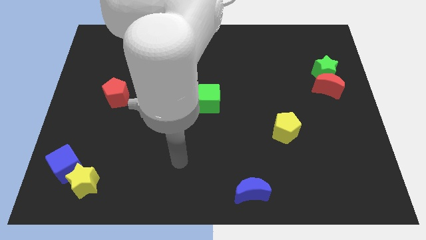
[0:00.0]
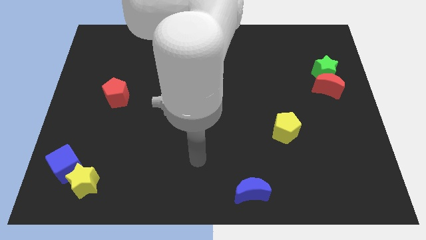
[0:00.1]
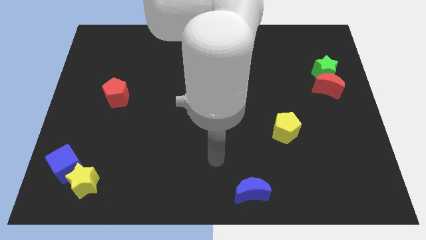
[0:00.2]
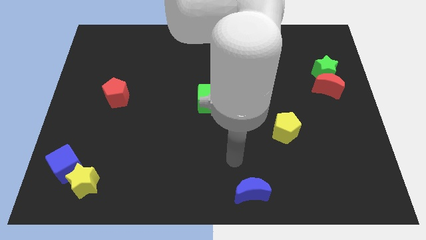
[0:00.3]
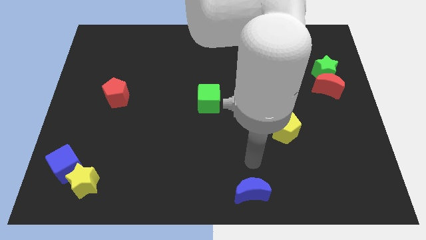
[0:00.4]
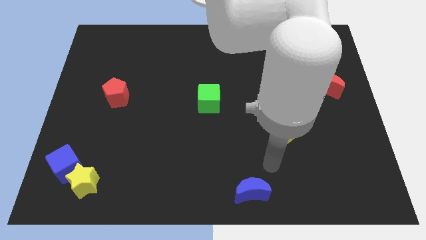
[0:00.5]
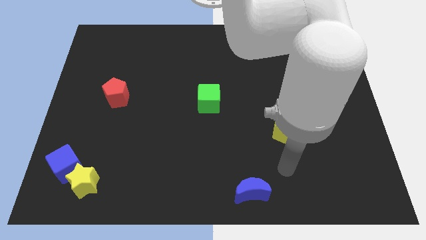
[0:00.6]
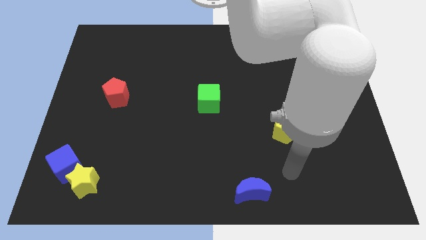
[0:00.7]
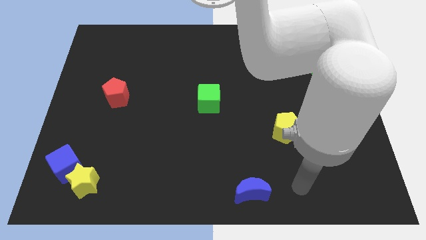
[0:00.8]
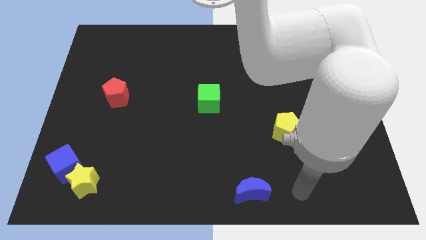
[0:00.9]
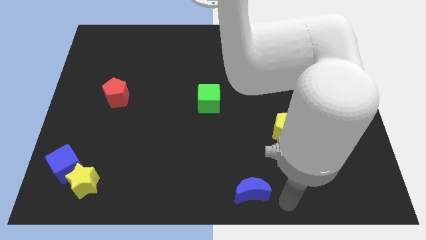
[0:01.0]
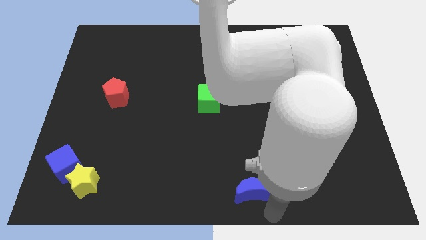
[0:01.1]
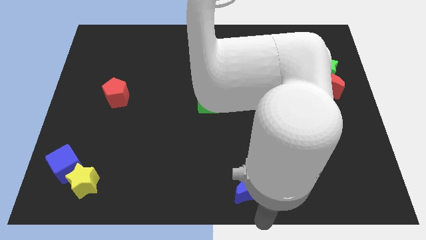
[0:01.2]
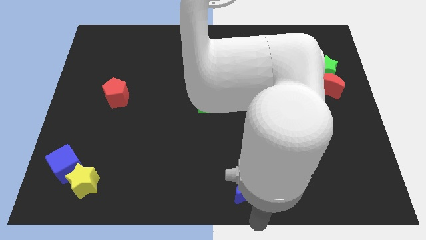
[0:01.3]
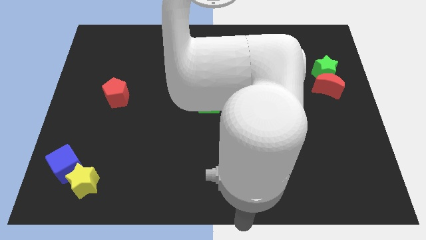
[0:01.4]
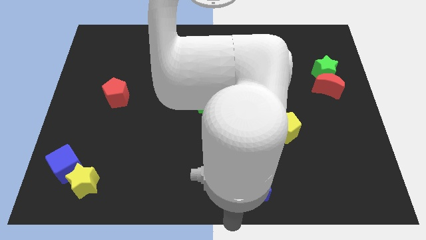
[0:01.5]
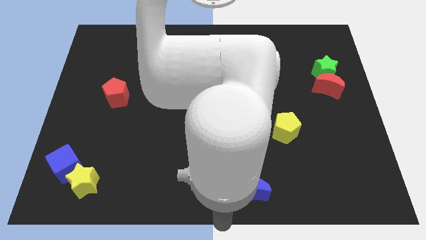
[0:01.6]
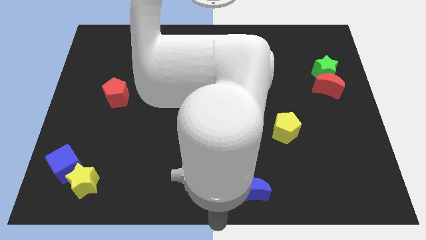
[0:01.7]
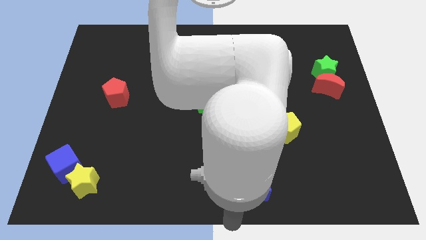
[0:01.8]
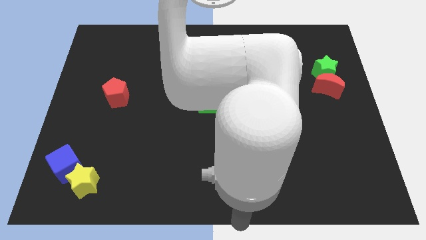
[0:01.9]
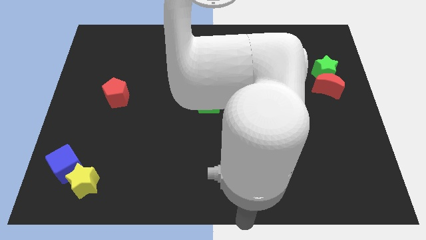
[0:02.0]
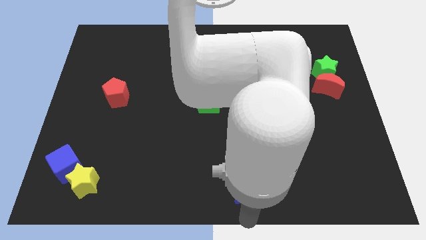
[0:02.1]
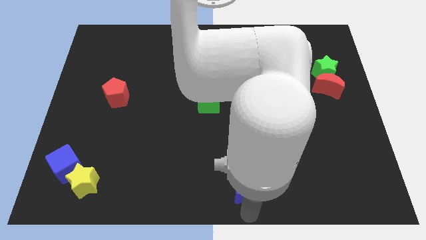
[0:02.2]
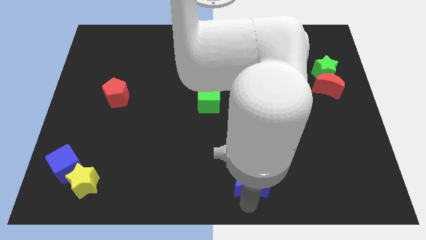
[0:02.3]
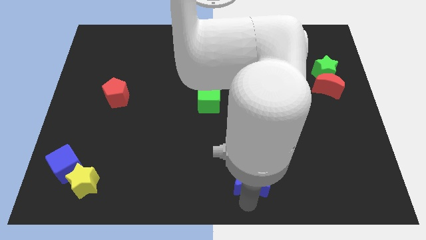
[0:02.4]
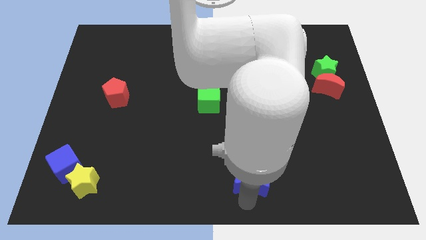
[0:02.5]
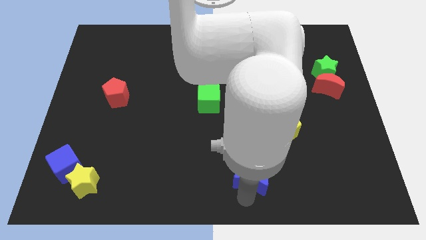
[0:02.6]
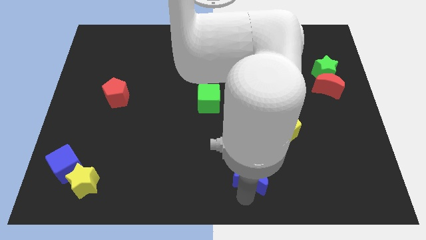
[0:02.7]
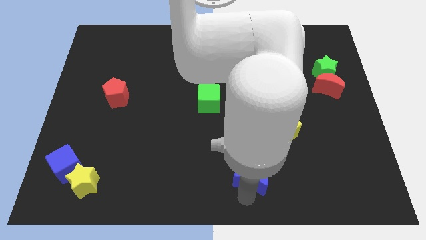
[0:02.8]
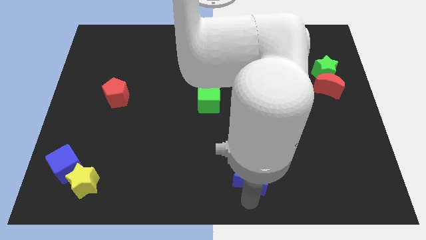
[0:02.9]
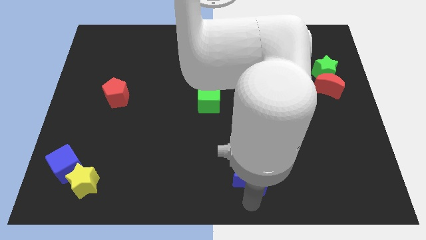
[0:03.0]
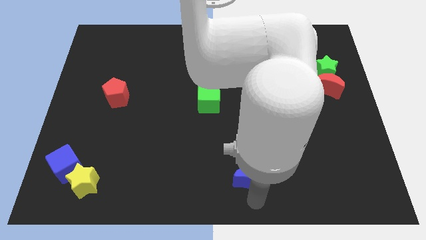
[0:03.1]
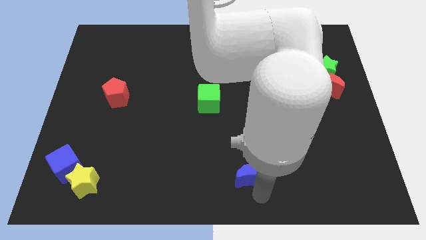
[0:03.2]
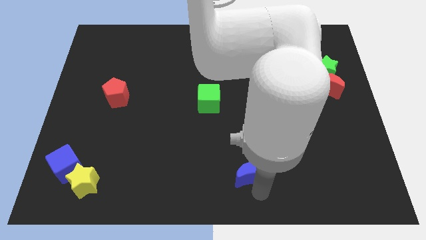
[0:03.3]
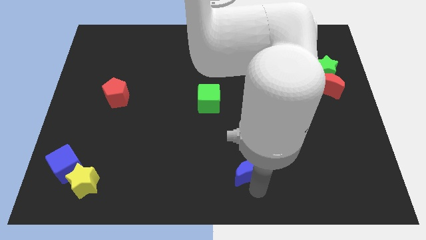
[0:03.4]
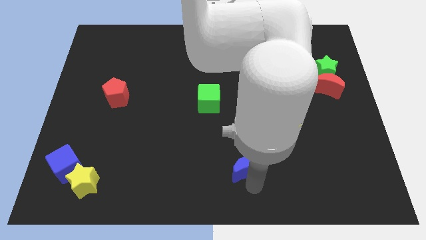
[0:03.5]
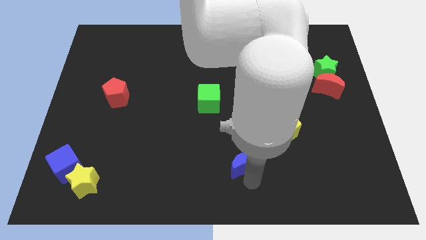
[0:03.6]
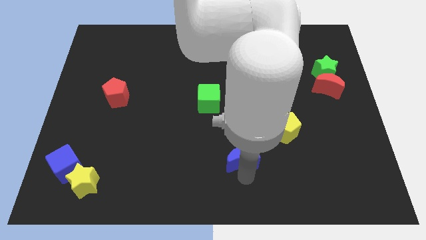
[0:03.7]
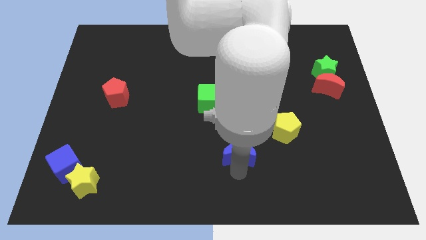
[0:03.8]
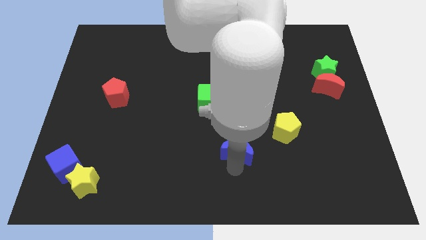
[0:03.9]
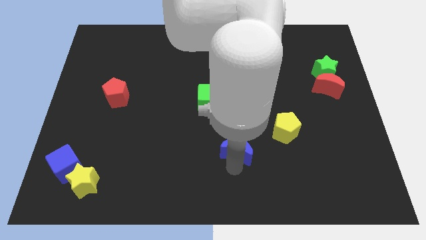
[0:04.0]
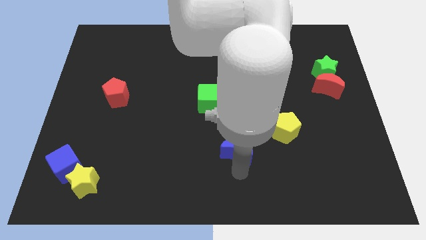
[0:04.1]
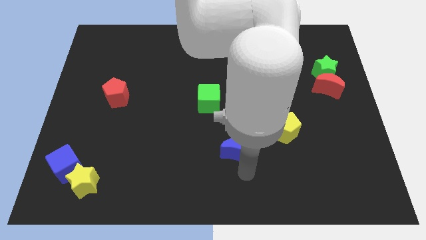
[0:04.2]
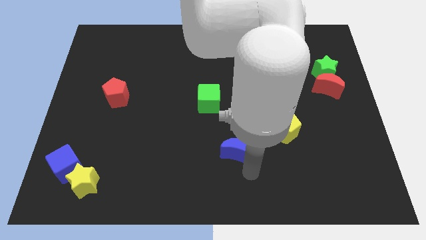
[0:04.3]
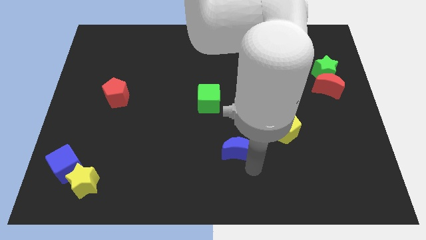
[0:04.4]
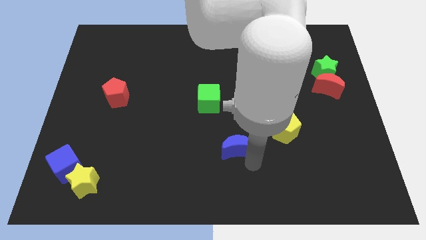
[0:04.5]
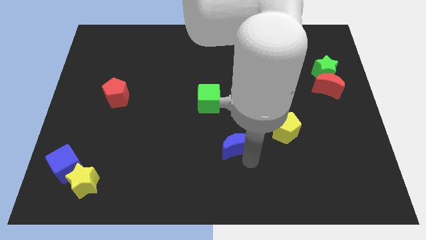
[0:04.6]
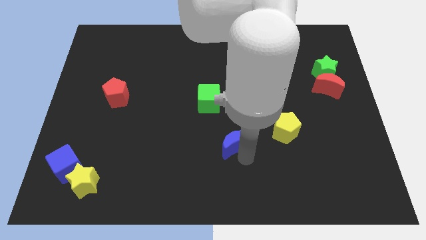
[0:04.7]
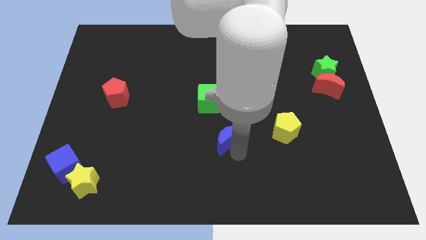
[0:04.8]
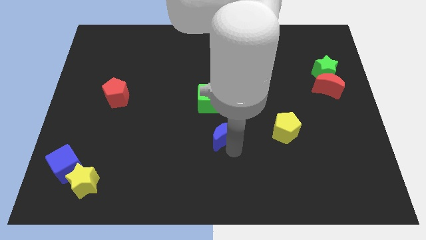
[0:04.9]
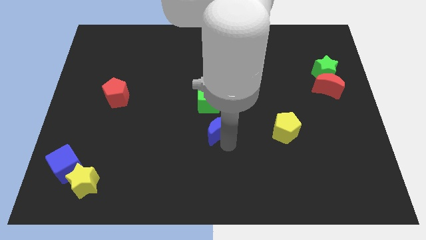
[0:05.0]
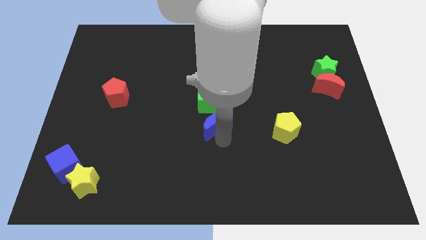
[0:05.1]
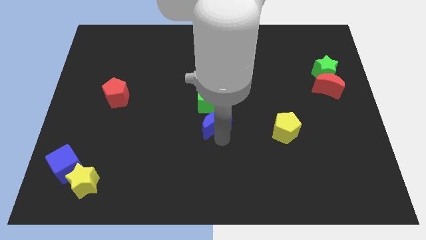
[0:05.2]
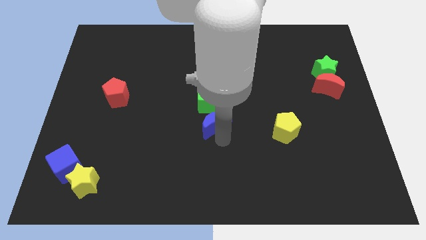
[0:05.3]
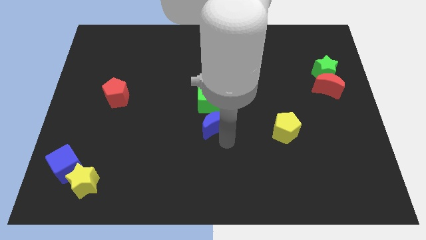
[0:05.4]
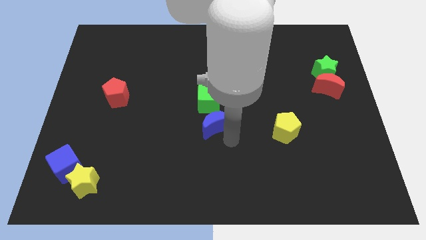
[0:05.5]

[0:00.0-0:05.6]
move the blue crescent below the green cube

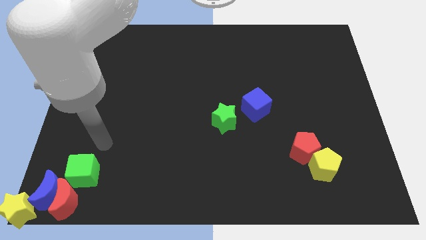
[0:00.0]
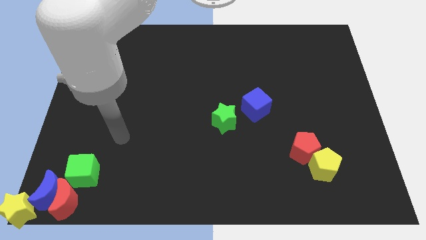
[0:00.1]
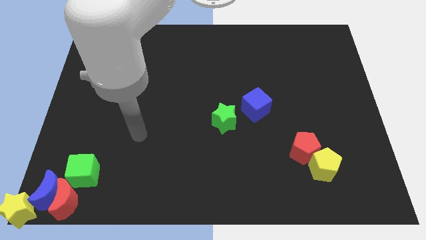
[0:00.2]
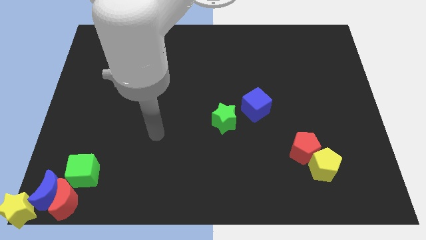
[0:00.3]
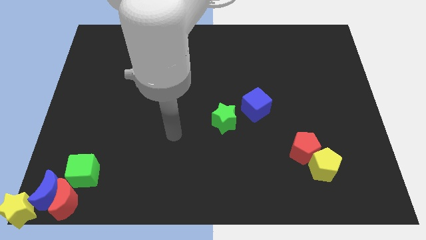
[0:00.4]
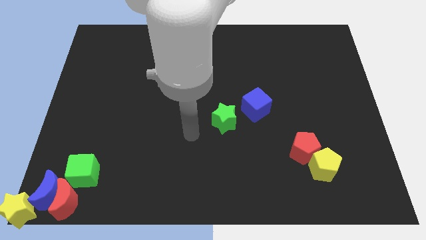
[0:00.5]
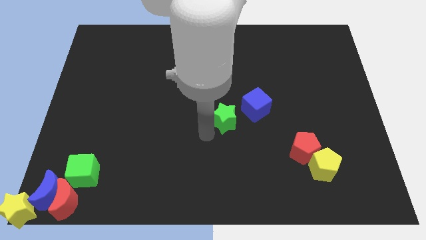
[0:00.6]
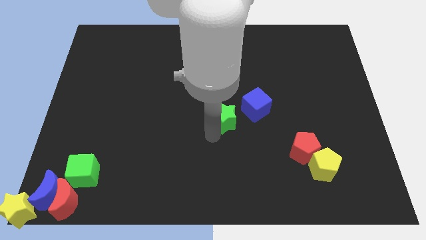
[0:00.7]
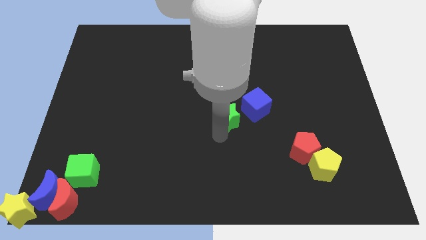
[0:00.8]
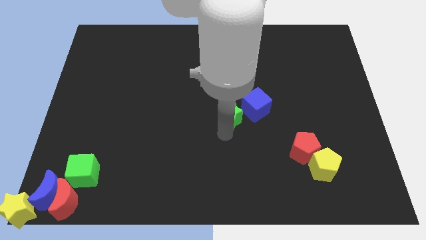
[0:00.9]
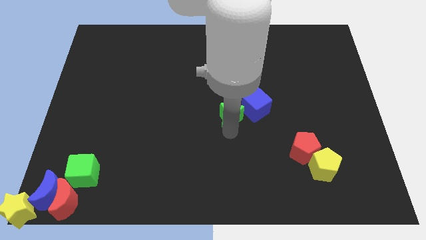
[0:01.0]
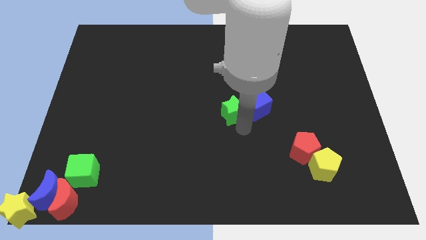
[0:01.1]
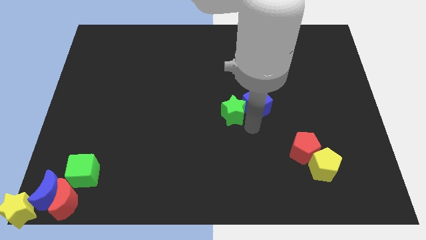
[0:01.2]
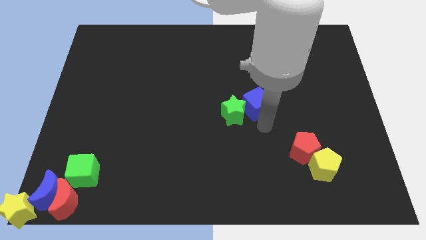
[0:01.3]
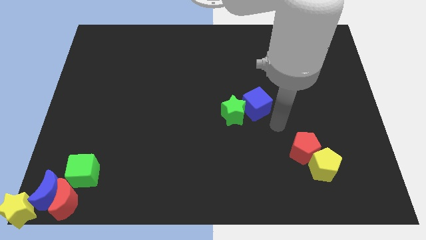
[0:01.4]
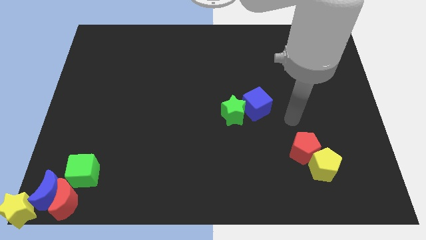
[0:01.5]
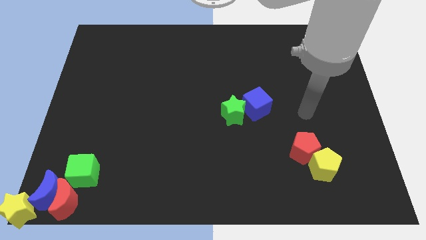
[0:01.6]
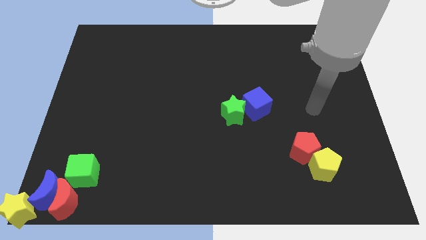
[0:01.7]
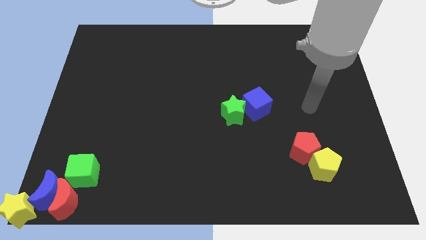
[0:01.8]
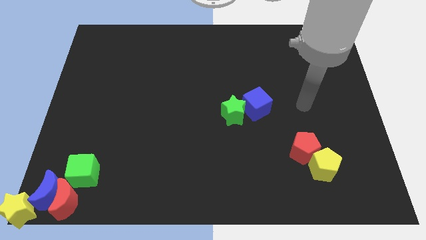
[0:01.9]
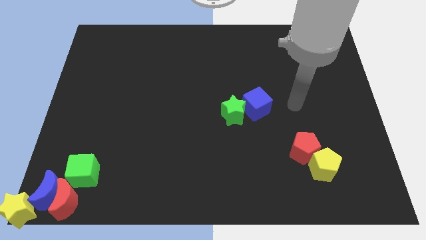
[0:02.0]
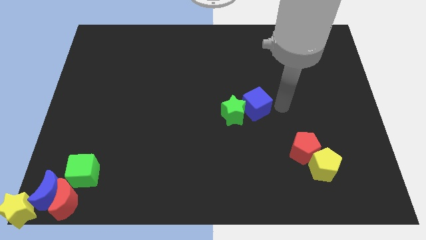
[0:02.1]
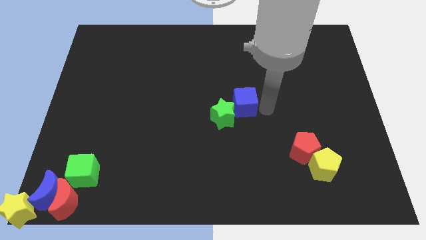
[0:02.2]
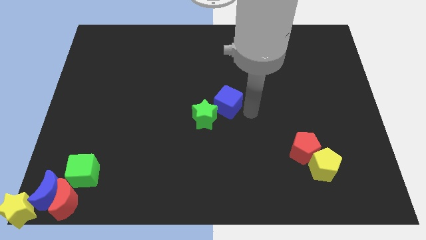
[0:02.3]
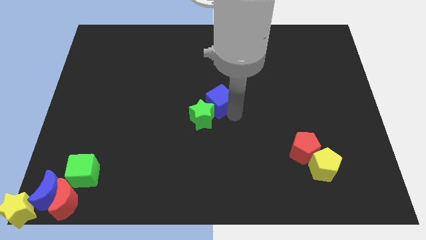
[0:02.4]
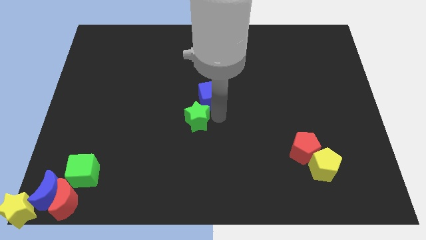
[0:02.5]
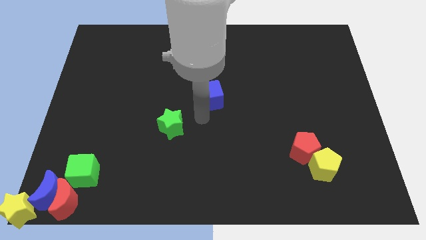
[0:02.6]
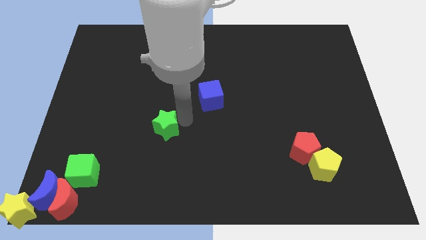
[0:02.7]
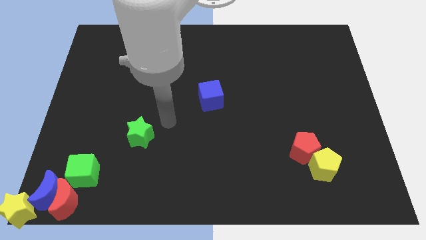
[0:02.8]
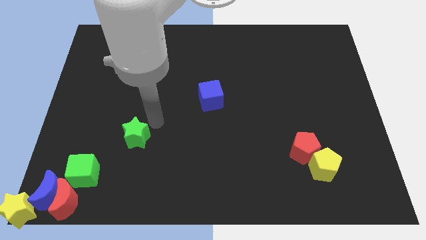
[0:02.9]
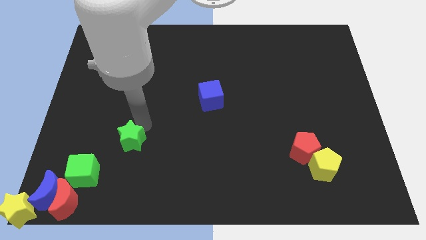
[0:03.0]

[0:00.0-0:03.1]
push the green star towards the green cube

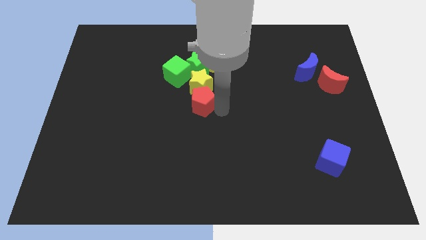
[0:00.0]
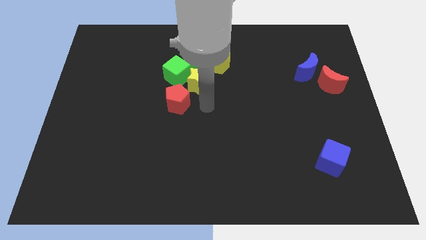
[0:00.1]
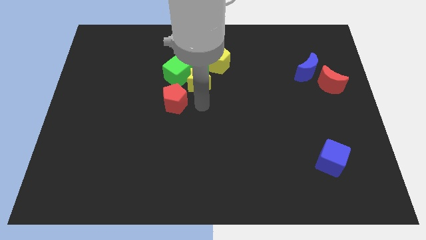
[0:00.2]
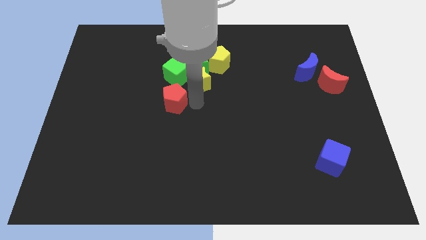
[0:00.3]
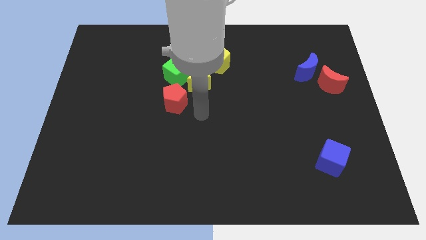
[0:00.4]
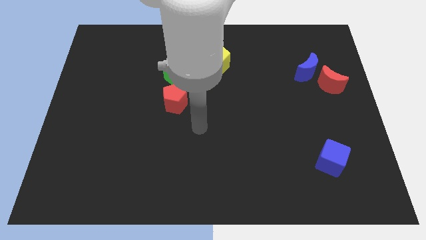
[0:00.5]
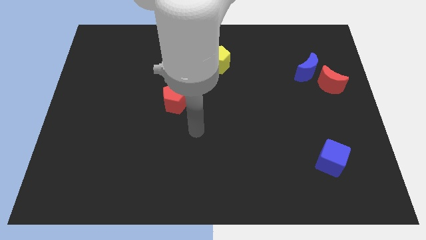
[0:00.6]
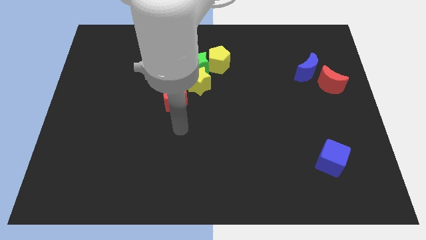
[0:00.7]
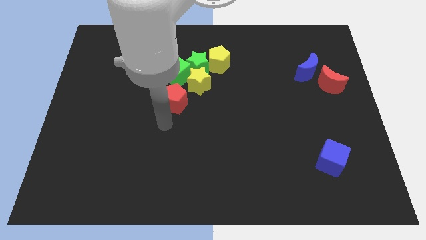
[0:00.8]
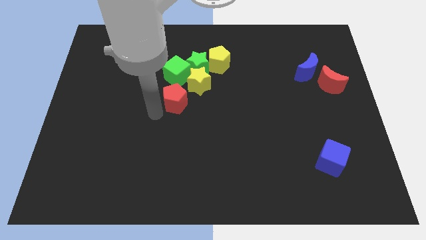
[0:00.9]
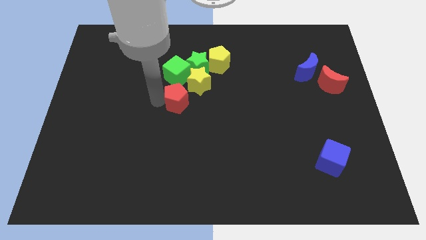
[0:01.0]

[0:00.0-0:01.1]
separate red pentagon from yellow star
